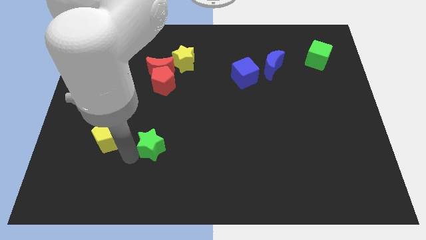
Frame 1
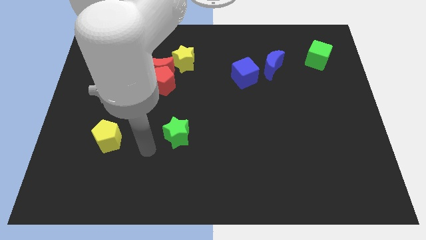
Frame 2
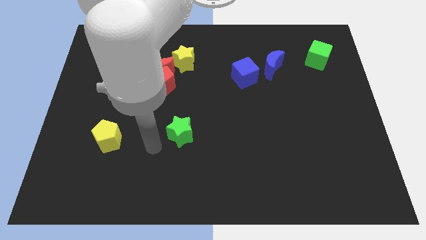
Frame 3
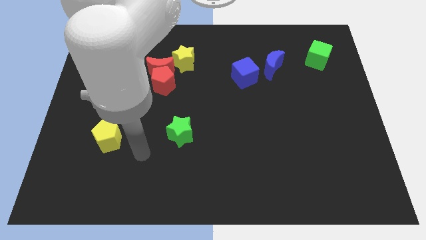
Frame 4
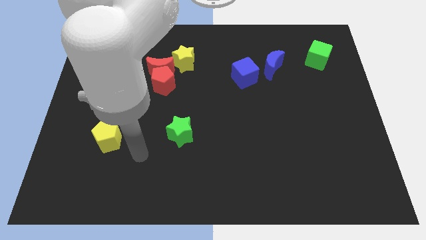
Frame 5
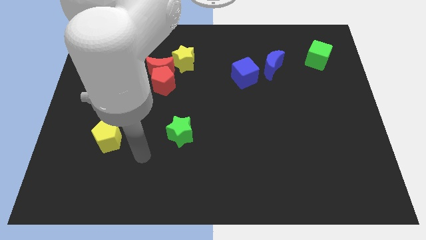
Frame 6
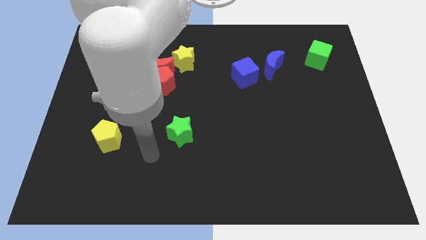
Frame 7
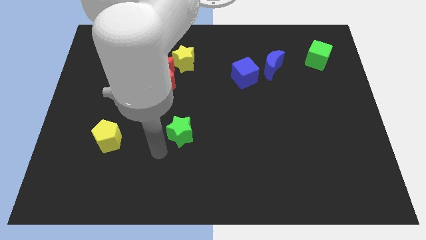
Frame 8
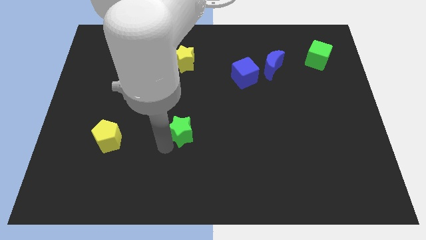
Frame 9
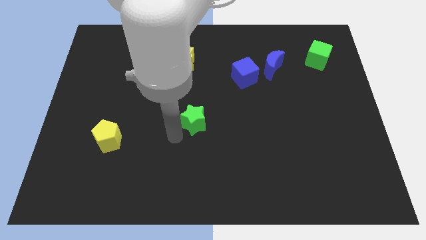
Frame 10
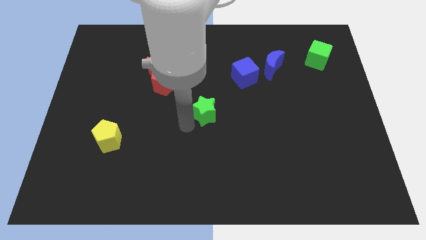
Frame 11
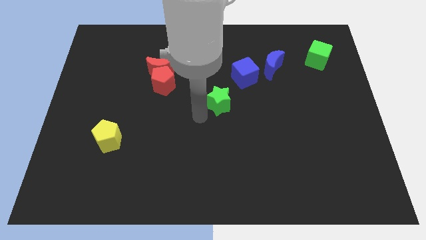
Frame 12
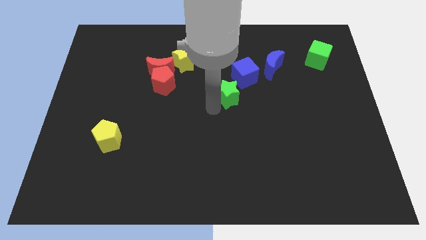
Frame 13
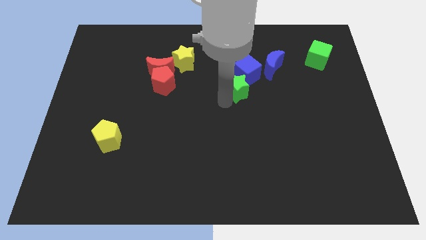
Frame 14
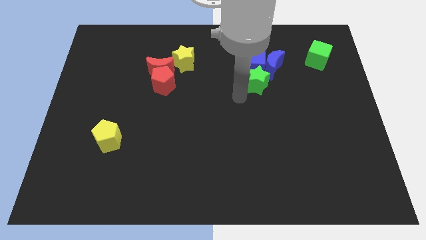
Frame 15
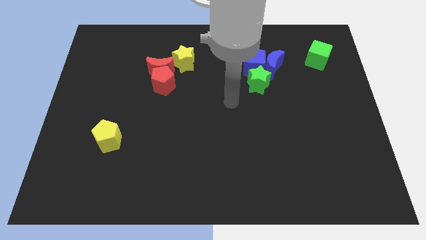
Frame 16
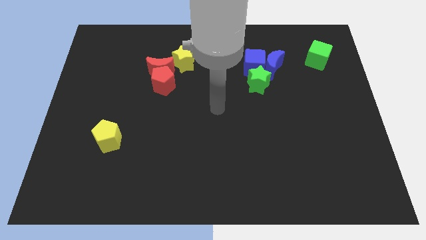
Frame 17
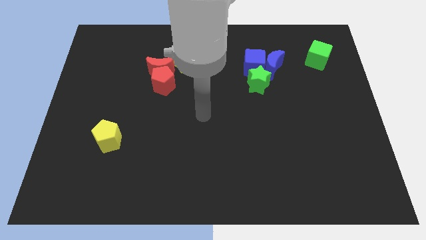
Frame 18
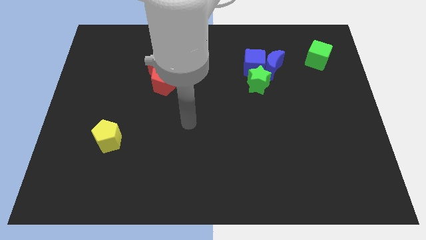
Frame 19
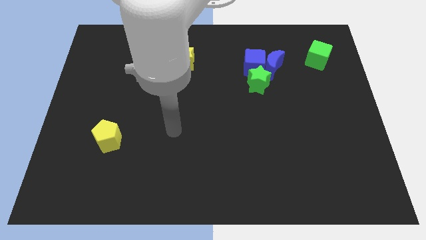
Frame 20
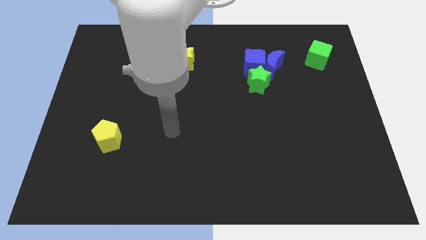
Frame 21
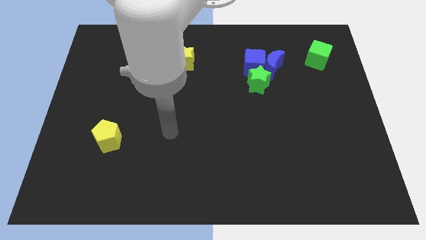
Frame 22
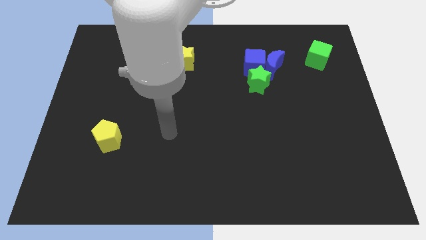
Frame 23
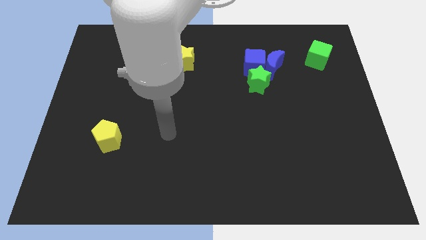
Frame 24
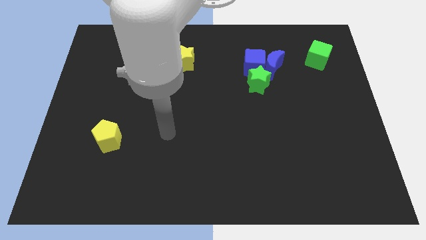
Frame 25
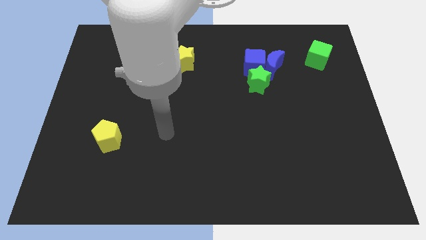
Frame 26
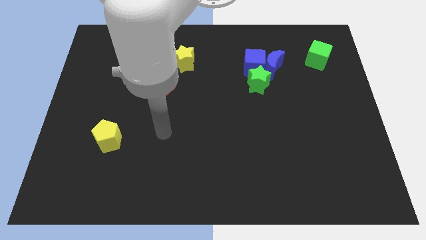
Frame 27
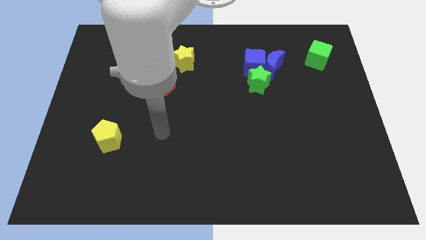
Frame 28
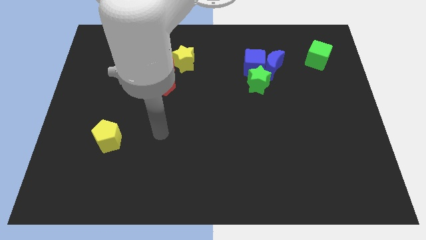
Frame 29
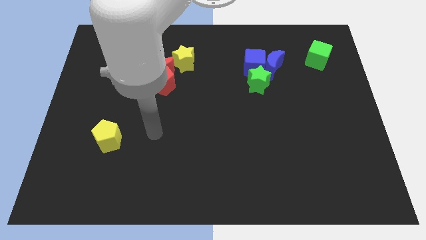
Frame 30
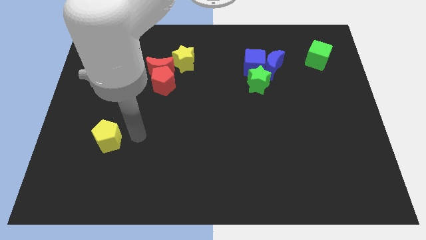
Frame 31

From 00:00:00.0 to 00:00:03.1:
place the green star below the blue blocks

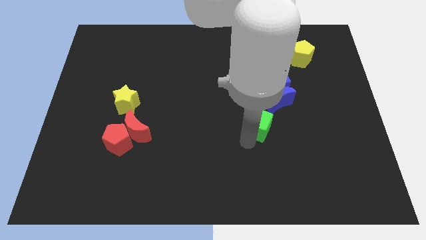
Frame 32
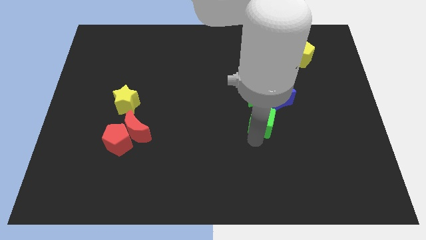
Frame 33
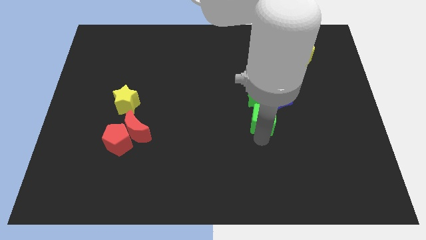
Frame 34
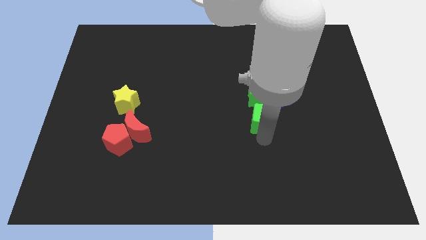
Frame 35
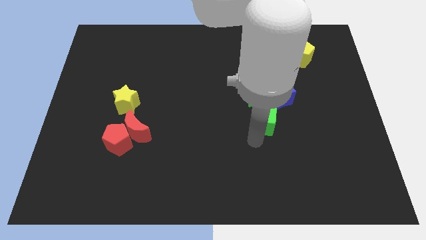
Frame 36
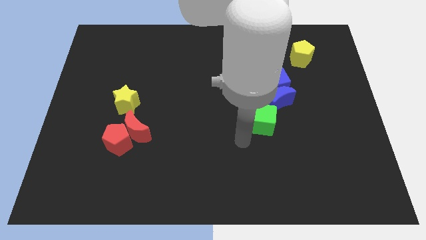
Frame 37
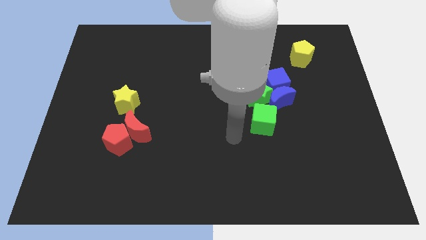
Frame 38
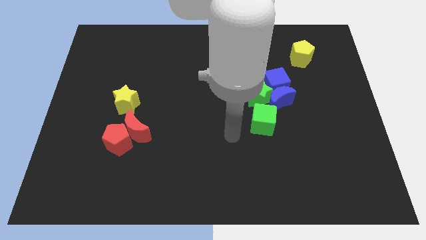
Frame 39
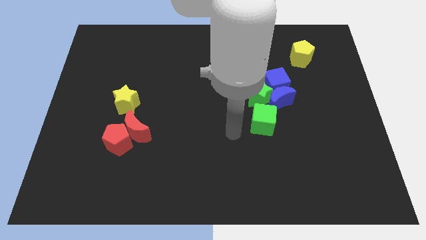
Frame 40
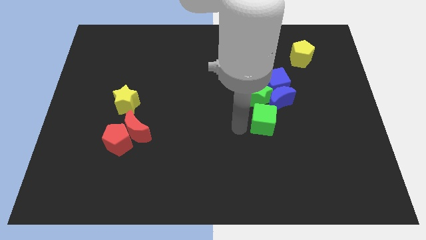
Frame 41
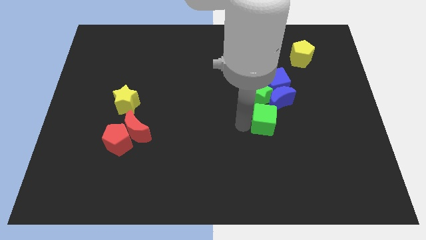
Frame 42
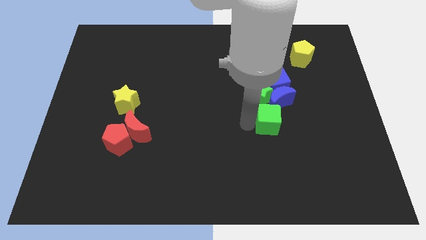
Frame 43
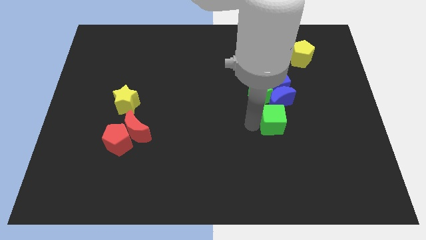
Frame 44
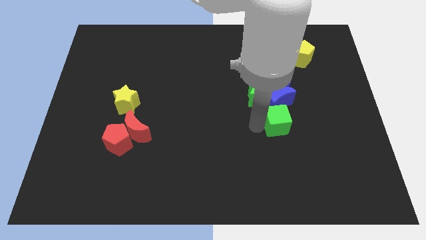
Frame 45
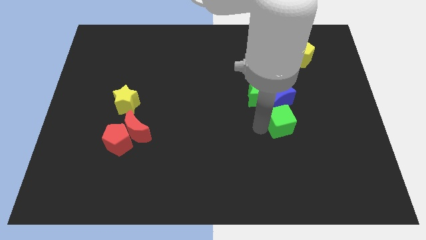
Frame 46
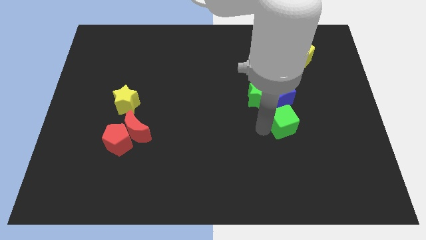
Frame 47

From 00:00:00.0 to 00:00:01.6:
place the green cube at the below the blue moon

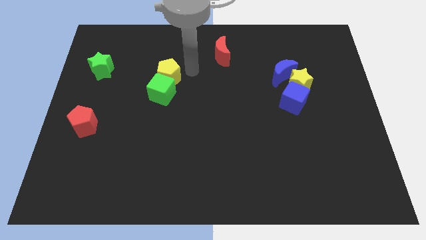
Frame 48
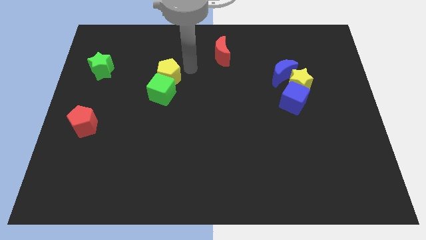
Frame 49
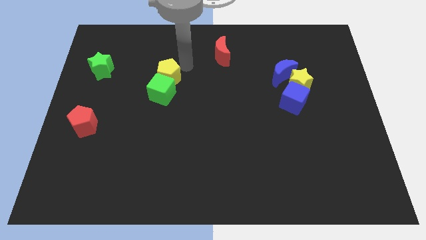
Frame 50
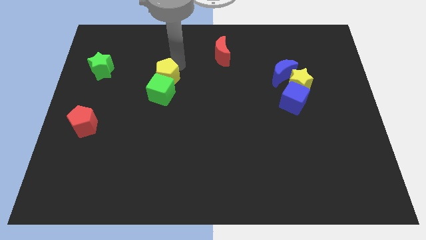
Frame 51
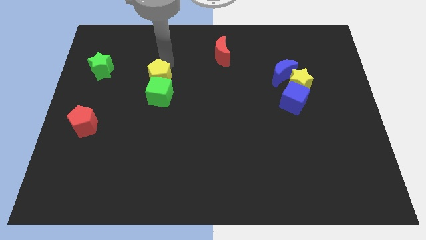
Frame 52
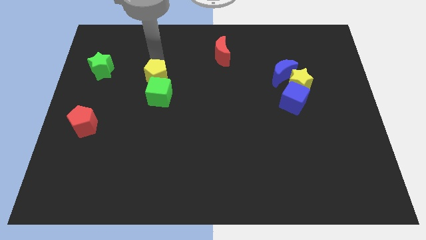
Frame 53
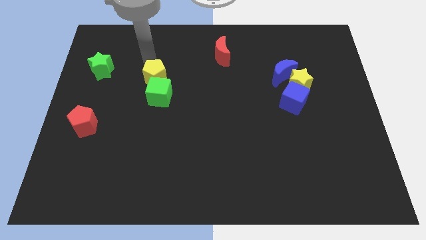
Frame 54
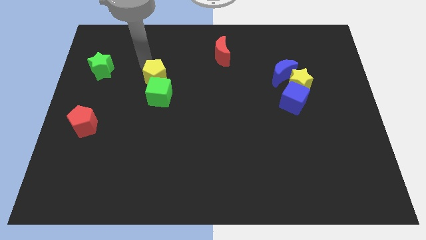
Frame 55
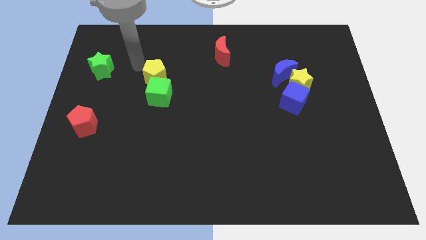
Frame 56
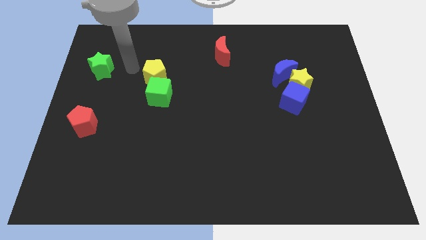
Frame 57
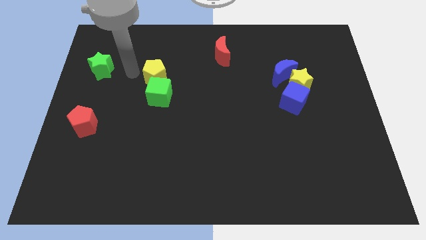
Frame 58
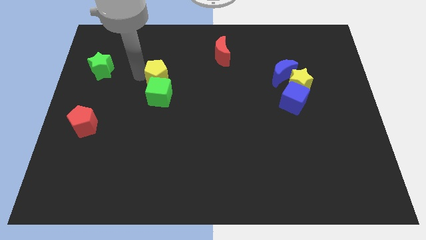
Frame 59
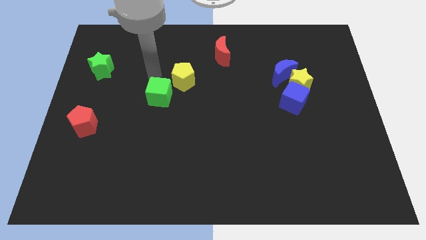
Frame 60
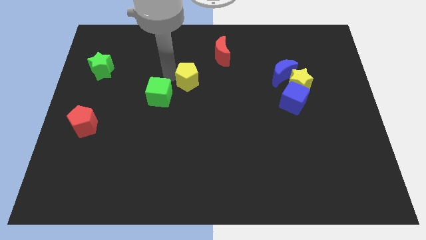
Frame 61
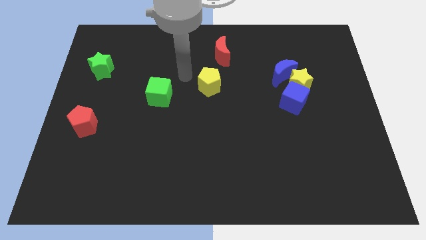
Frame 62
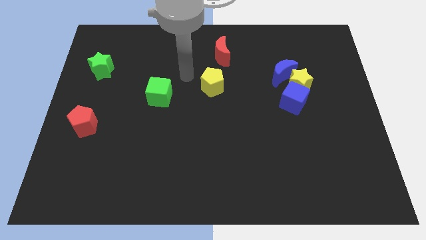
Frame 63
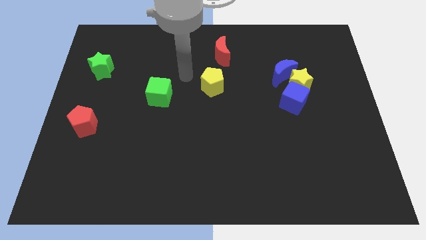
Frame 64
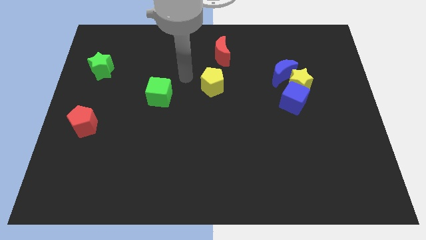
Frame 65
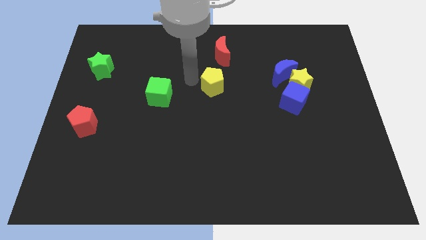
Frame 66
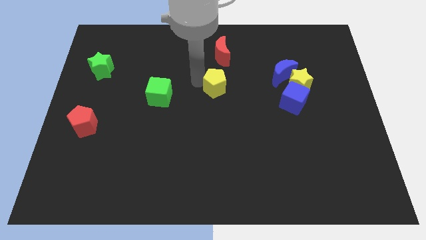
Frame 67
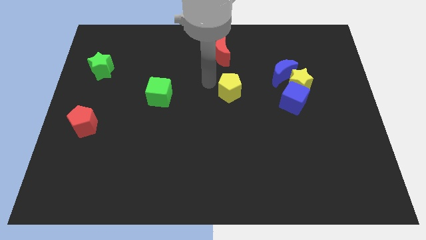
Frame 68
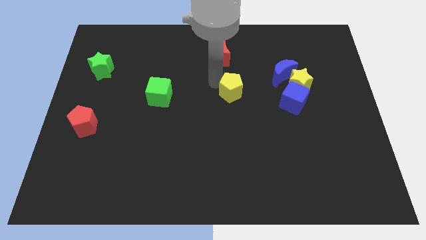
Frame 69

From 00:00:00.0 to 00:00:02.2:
push the yellow pentagon towards the bottom of the red moon

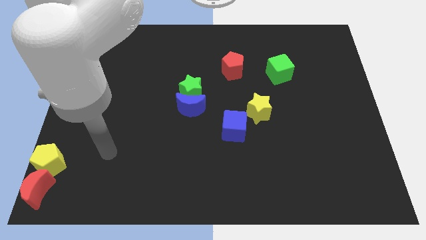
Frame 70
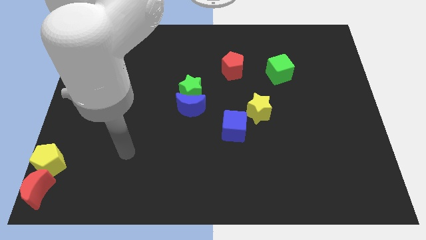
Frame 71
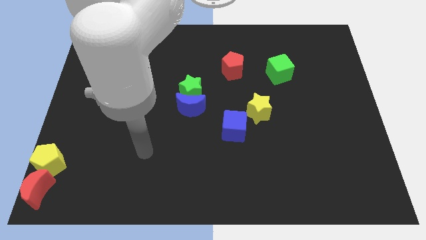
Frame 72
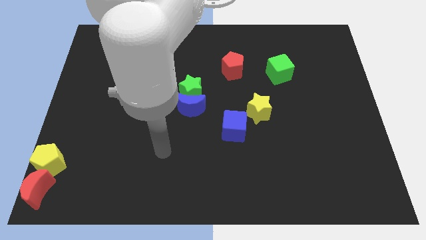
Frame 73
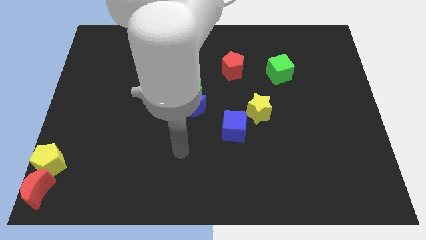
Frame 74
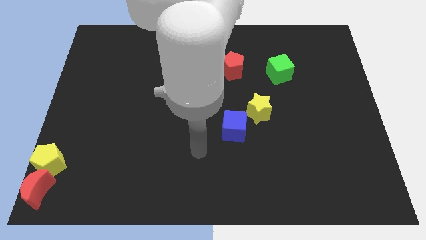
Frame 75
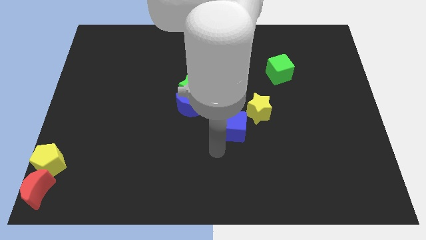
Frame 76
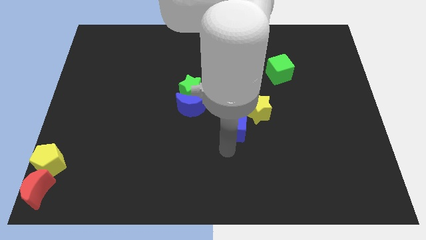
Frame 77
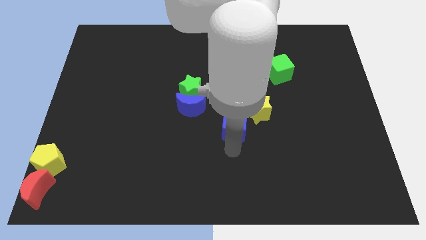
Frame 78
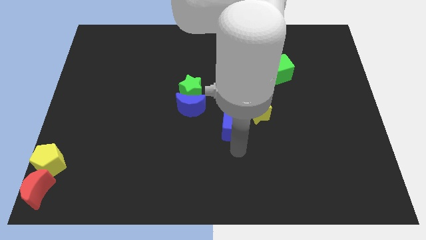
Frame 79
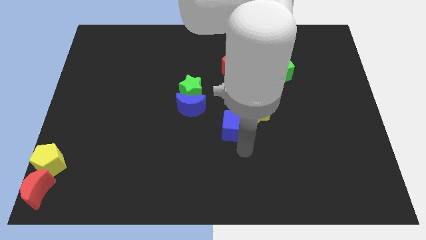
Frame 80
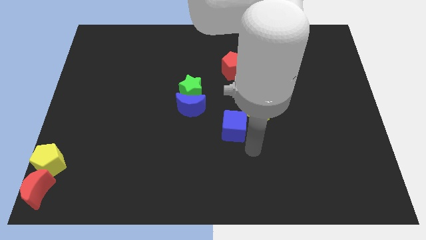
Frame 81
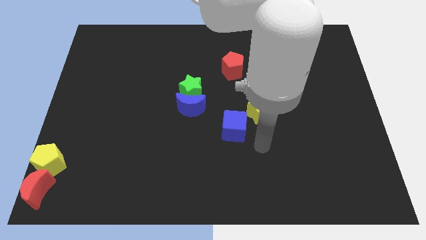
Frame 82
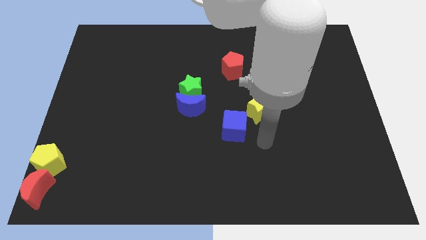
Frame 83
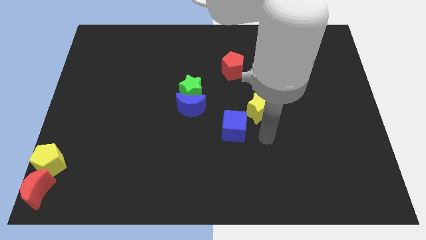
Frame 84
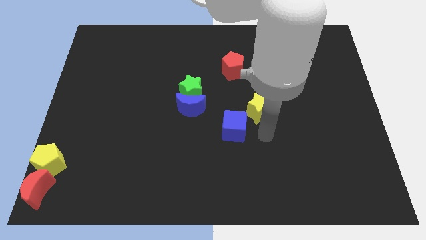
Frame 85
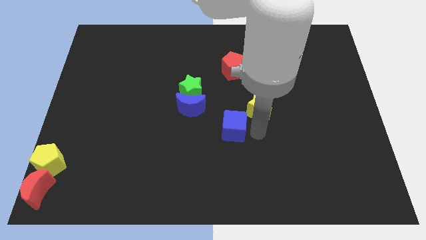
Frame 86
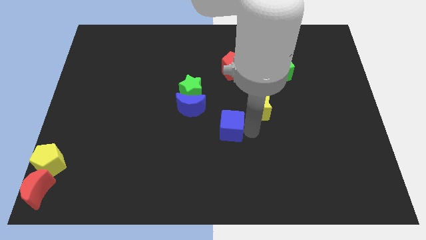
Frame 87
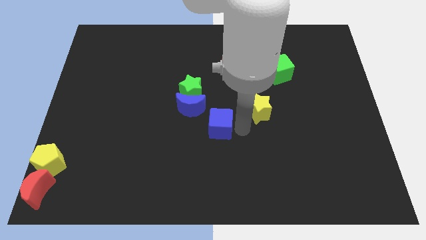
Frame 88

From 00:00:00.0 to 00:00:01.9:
place the arm towards the blue cube

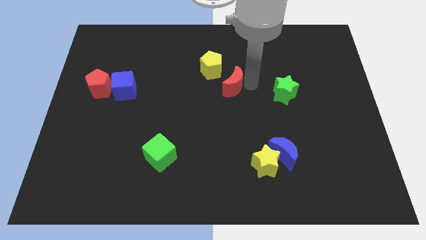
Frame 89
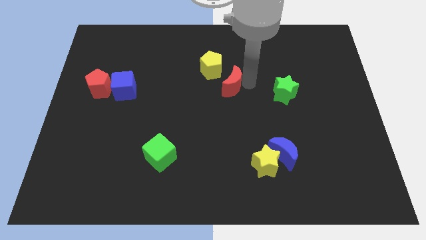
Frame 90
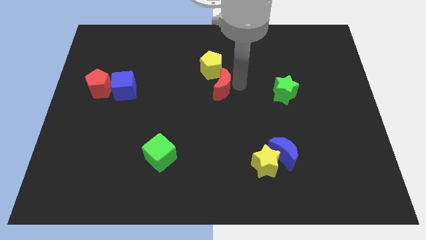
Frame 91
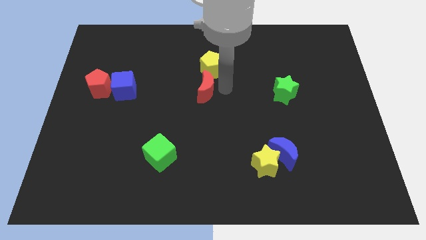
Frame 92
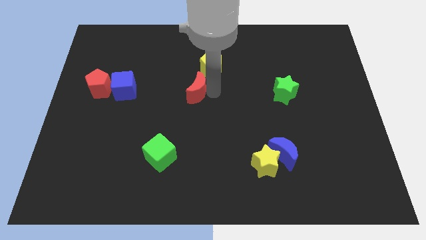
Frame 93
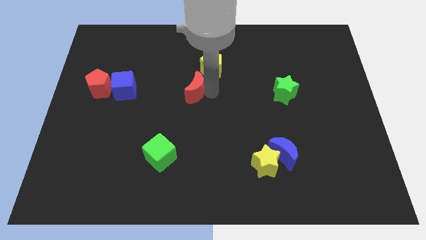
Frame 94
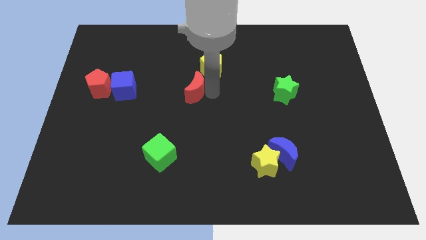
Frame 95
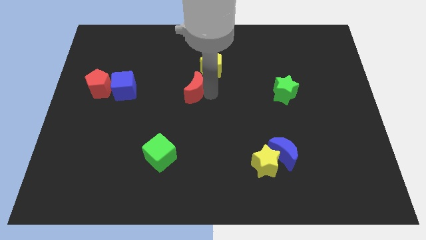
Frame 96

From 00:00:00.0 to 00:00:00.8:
move the red moon towards the left down of the yellow pentagon
